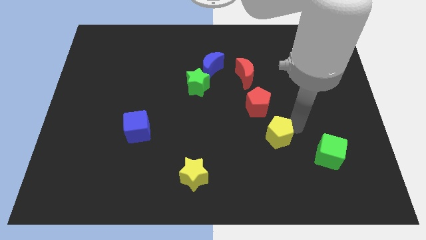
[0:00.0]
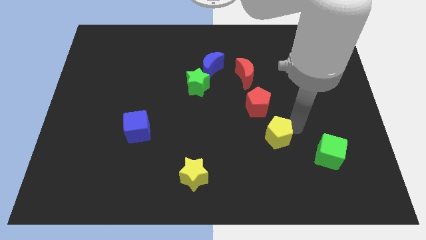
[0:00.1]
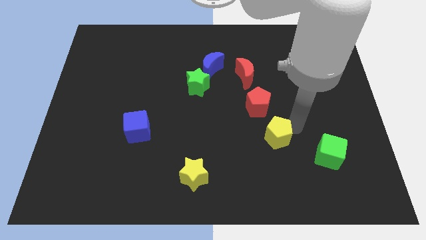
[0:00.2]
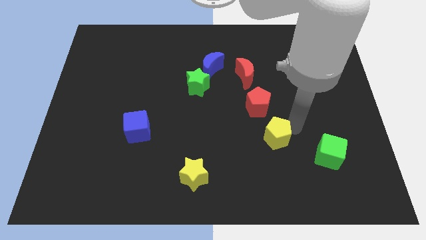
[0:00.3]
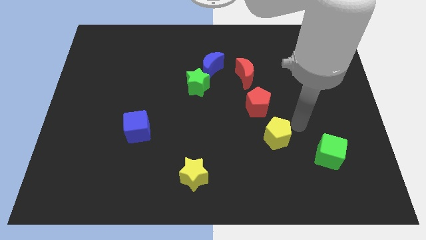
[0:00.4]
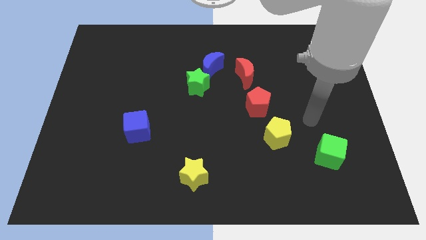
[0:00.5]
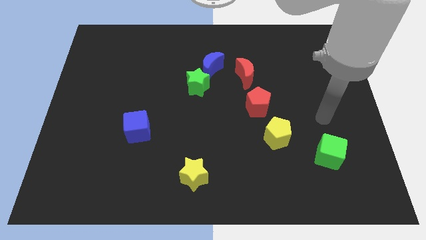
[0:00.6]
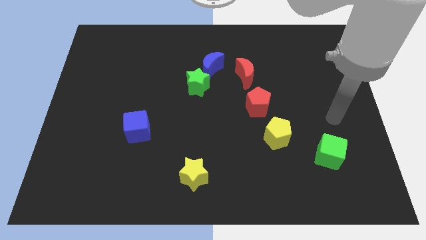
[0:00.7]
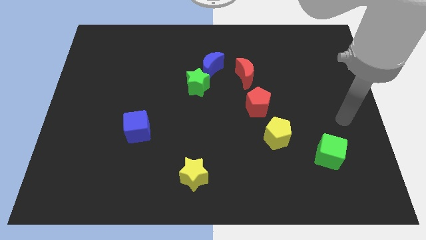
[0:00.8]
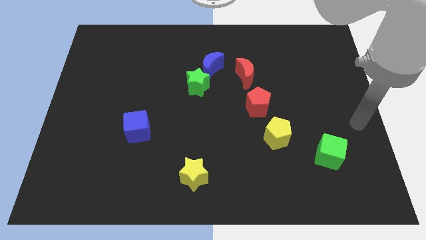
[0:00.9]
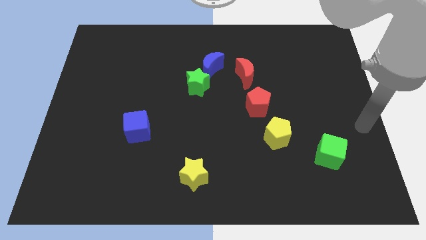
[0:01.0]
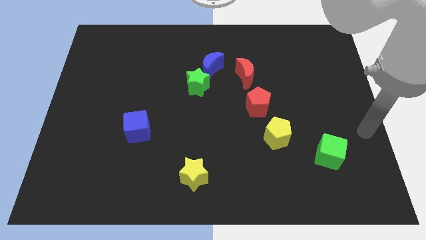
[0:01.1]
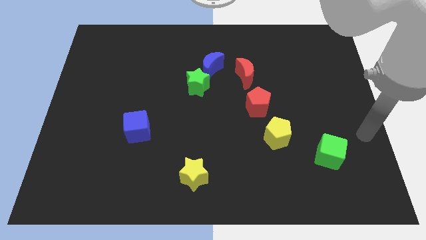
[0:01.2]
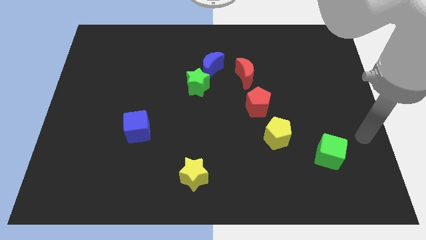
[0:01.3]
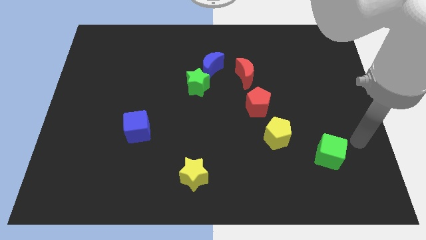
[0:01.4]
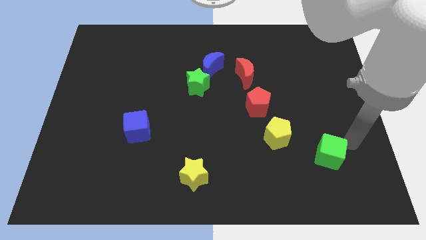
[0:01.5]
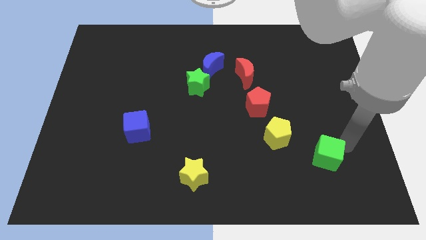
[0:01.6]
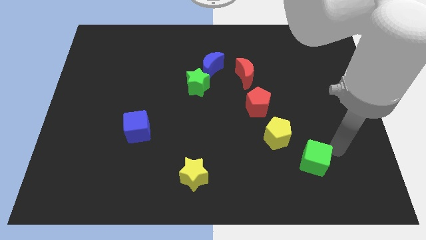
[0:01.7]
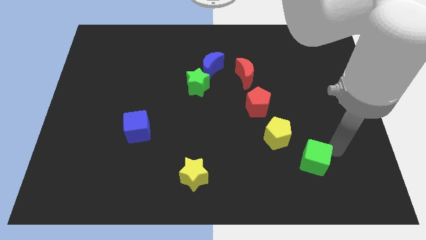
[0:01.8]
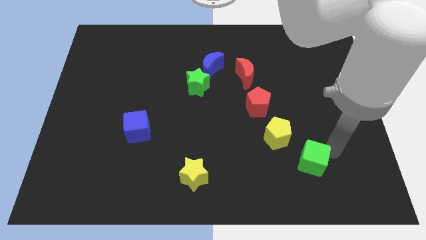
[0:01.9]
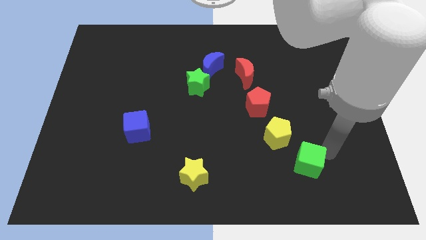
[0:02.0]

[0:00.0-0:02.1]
slightly move the green cube to the left side

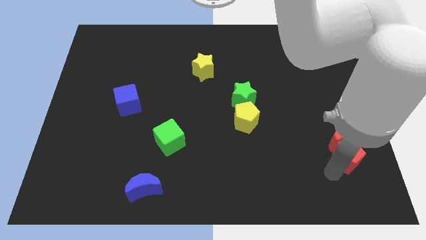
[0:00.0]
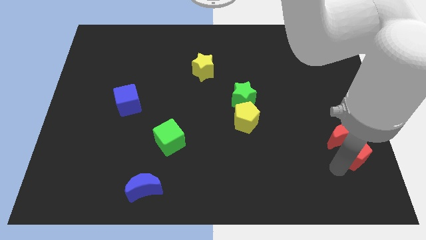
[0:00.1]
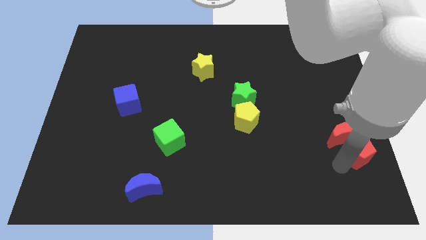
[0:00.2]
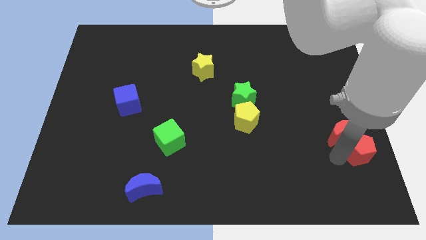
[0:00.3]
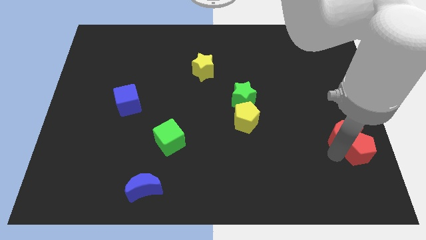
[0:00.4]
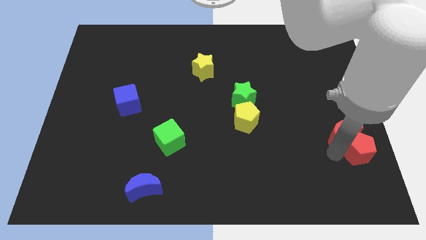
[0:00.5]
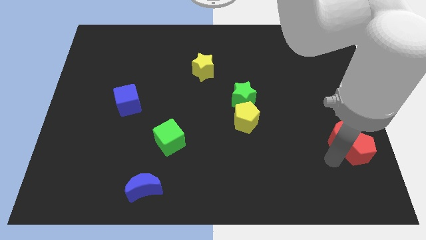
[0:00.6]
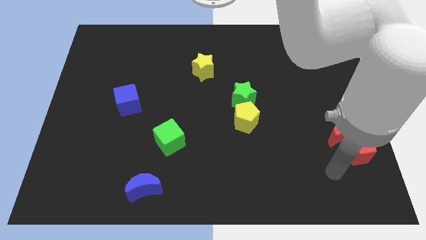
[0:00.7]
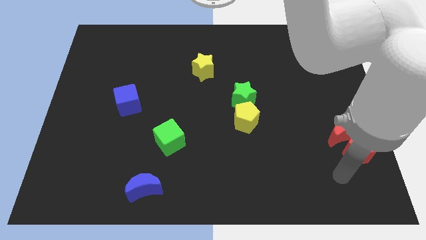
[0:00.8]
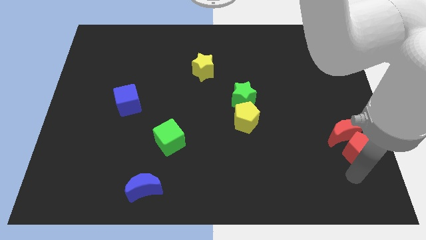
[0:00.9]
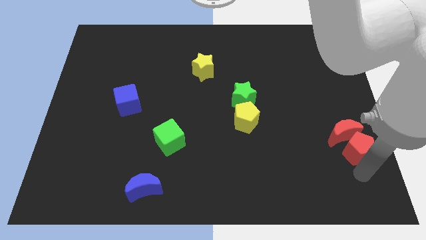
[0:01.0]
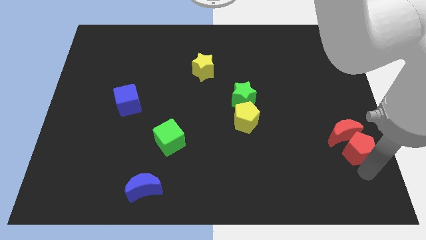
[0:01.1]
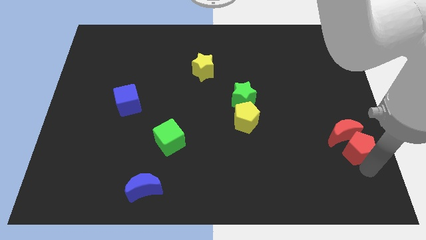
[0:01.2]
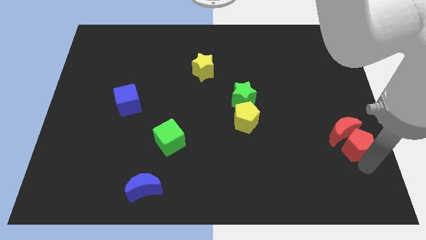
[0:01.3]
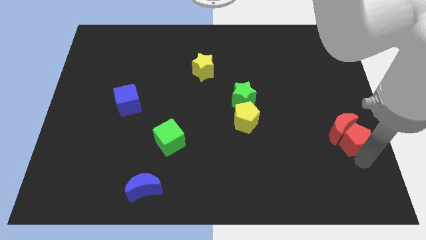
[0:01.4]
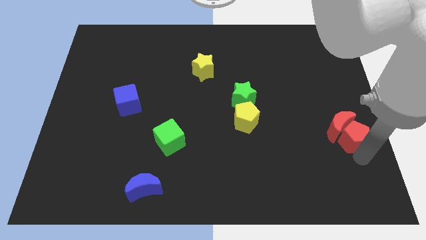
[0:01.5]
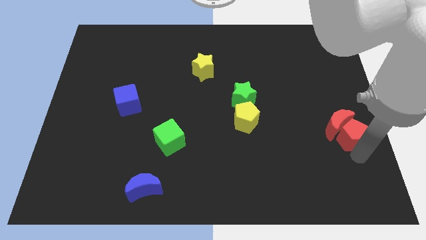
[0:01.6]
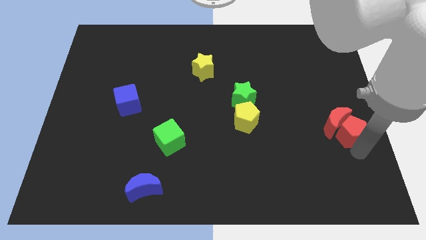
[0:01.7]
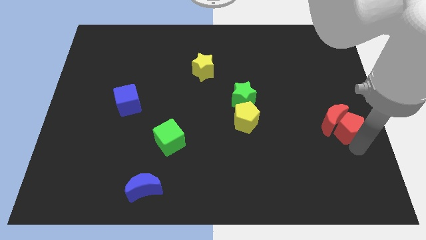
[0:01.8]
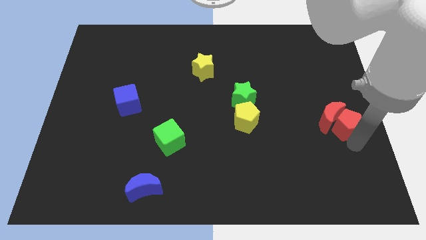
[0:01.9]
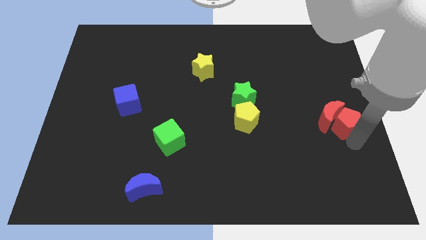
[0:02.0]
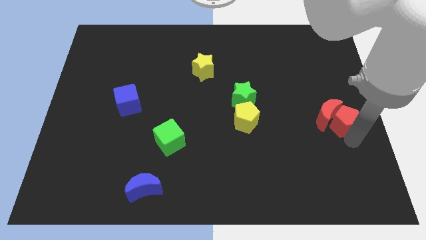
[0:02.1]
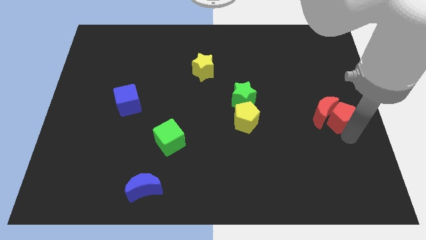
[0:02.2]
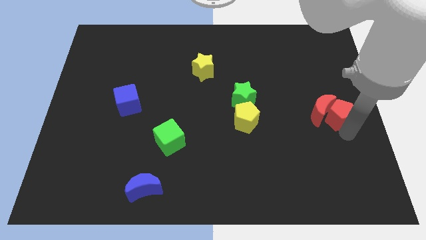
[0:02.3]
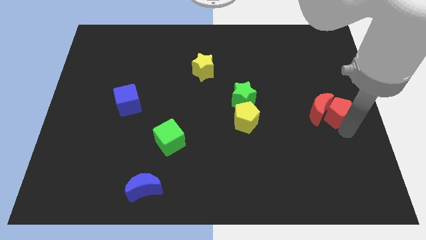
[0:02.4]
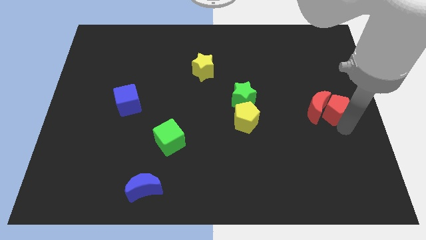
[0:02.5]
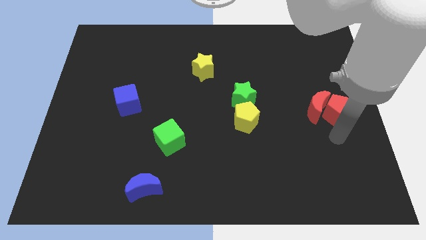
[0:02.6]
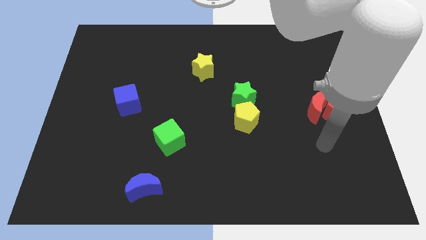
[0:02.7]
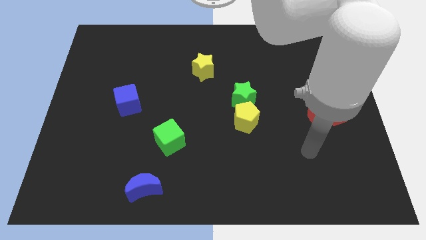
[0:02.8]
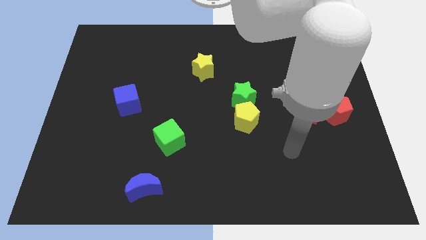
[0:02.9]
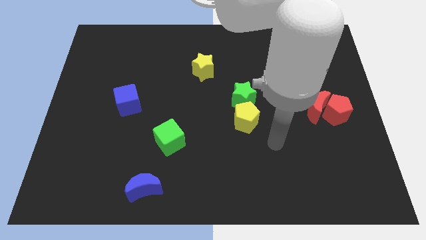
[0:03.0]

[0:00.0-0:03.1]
push the red blocks to the right of the yellow pentagon

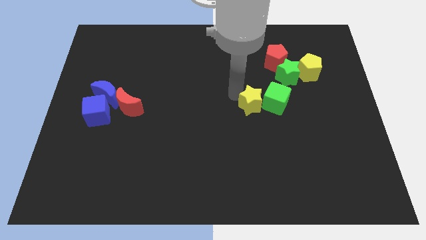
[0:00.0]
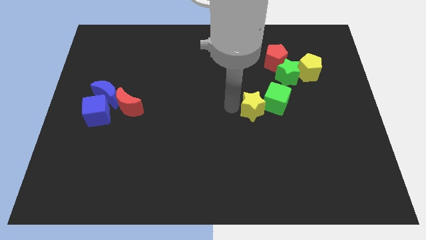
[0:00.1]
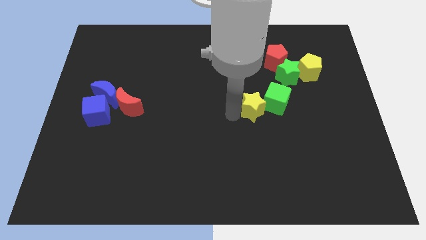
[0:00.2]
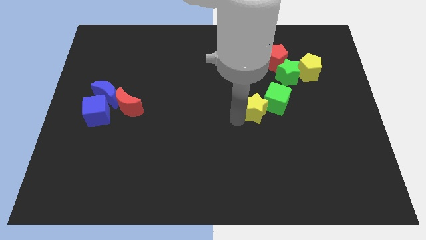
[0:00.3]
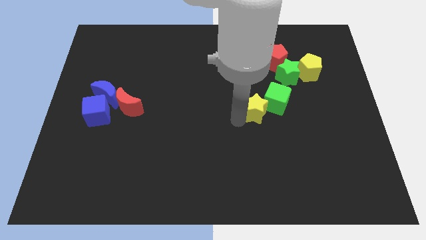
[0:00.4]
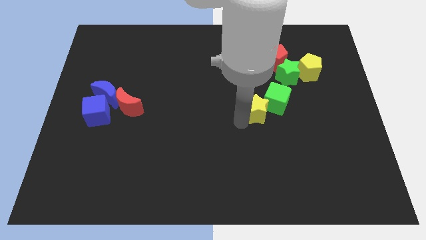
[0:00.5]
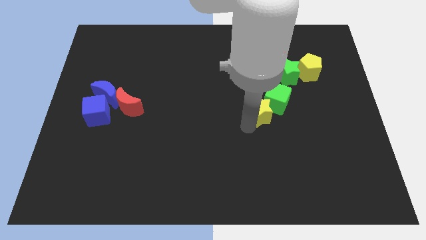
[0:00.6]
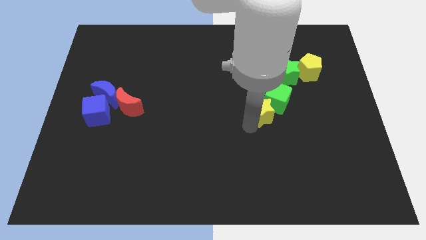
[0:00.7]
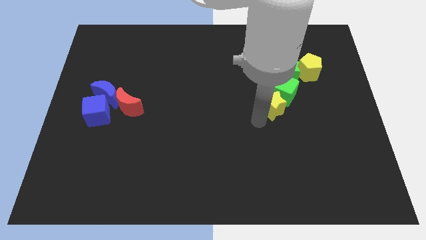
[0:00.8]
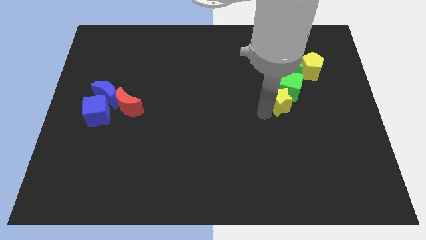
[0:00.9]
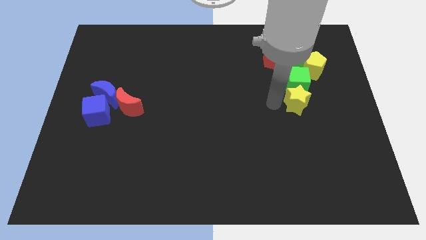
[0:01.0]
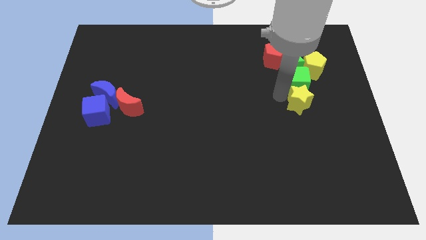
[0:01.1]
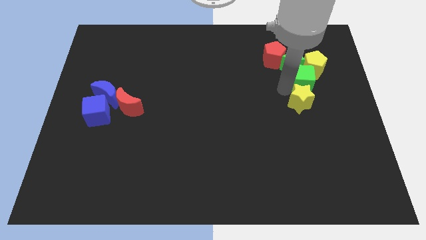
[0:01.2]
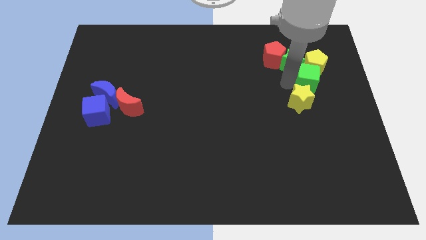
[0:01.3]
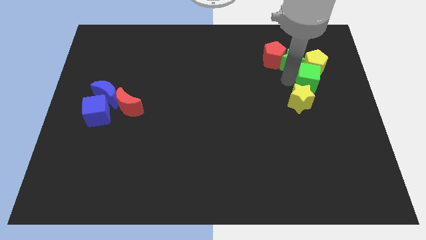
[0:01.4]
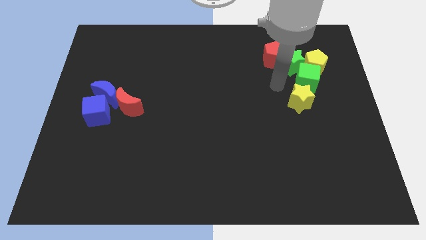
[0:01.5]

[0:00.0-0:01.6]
push the yellow star into the group of blocks

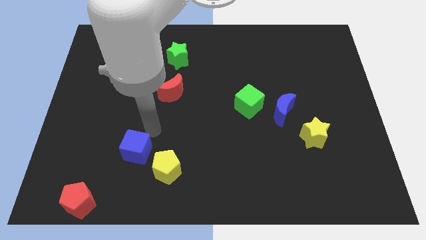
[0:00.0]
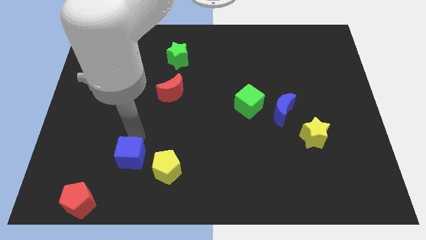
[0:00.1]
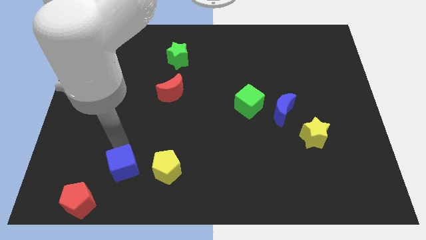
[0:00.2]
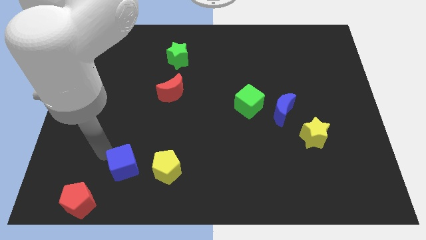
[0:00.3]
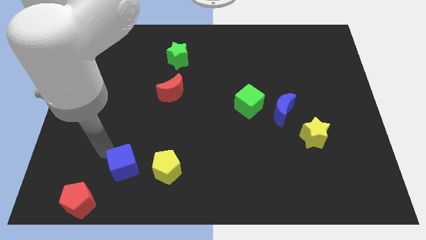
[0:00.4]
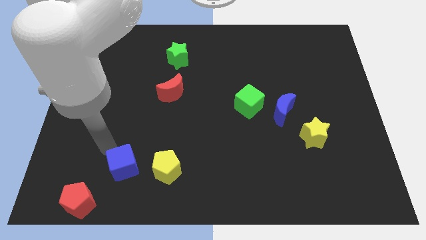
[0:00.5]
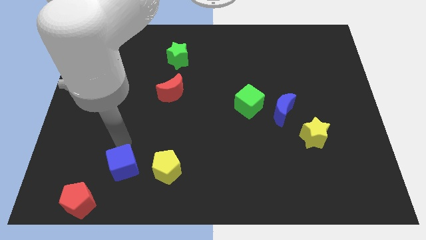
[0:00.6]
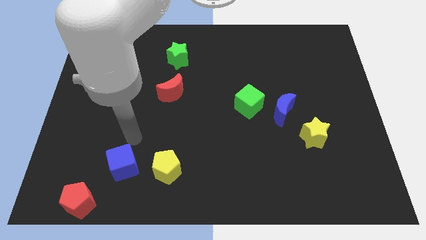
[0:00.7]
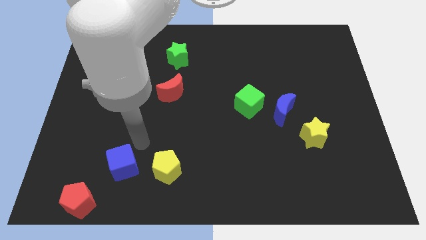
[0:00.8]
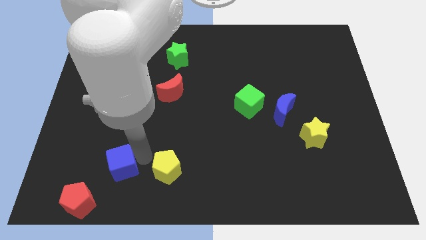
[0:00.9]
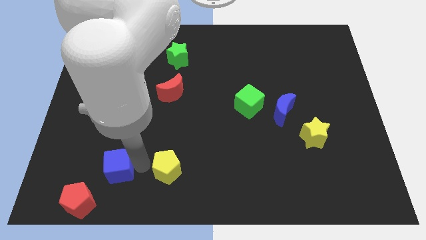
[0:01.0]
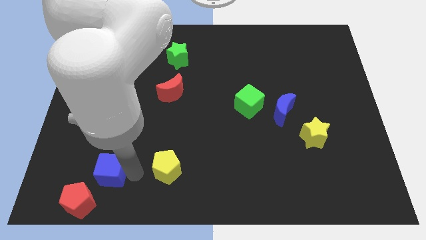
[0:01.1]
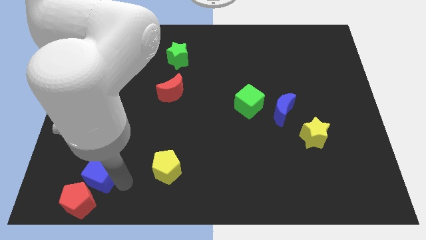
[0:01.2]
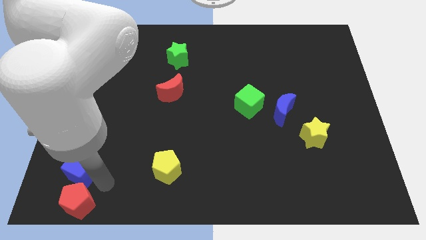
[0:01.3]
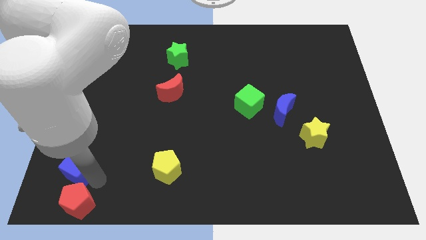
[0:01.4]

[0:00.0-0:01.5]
move blue cube to the top of red pentagon

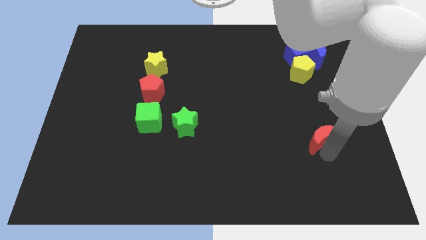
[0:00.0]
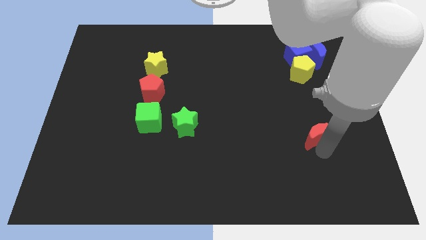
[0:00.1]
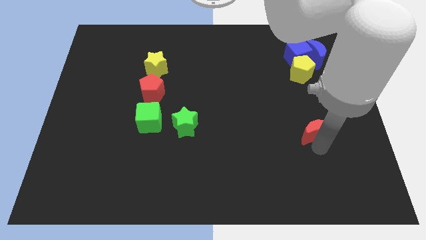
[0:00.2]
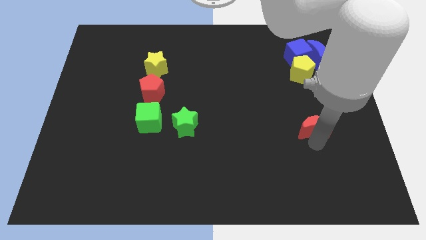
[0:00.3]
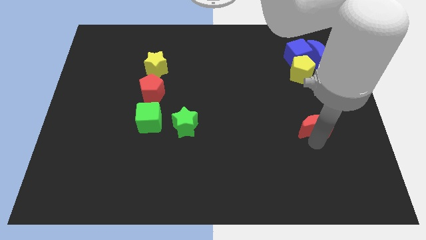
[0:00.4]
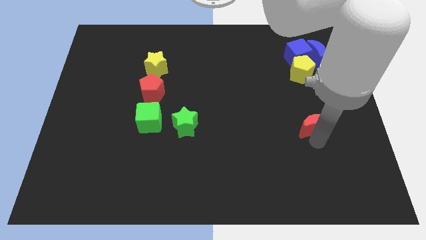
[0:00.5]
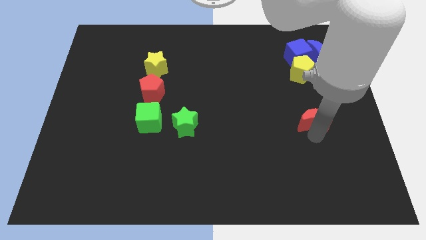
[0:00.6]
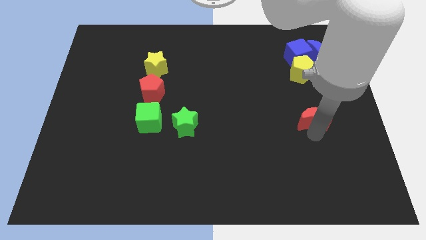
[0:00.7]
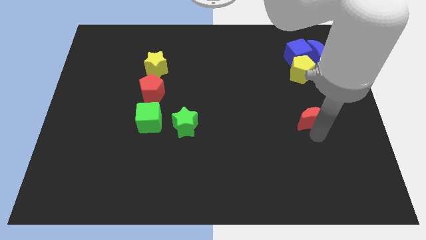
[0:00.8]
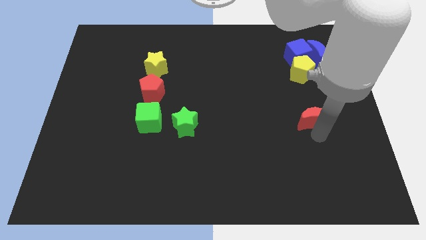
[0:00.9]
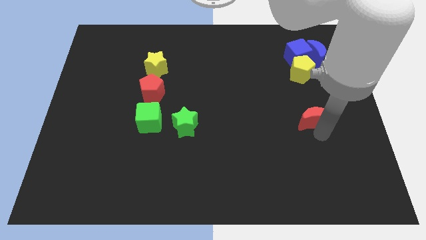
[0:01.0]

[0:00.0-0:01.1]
move the red crescent slightly towards top
